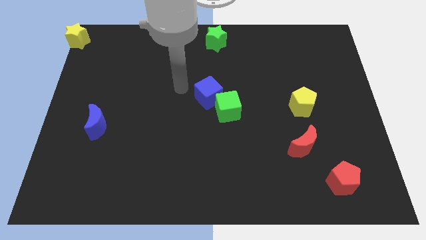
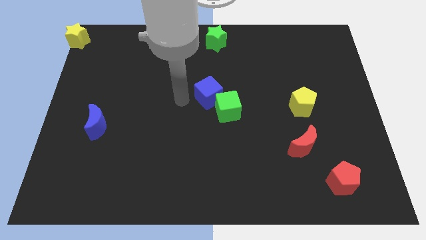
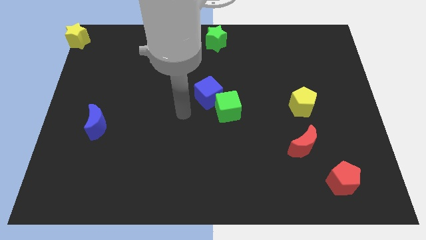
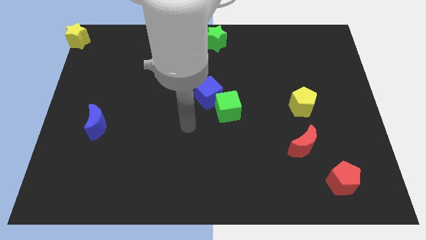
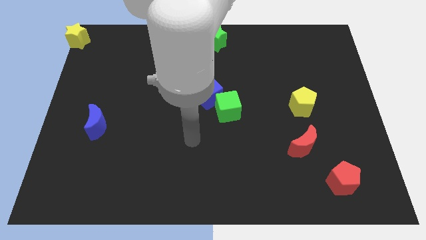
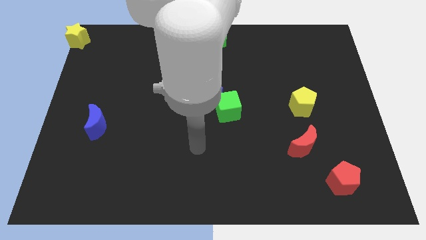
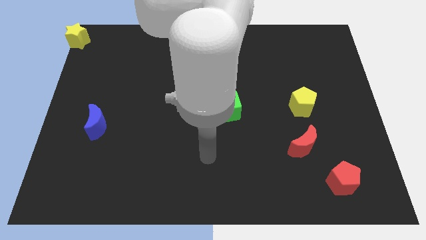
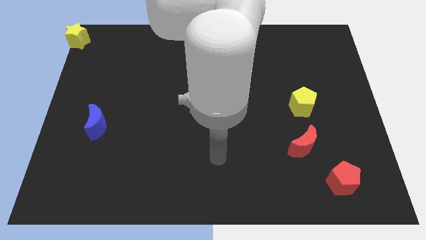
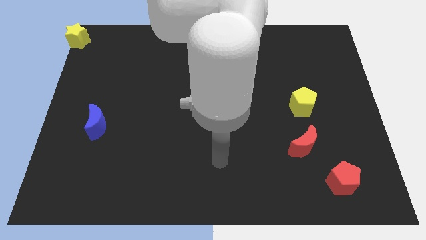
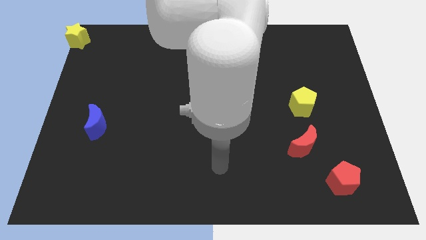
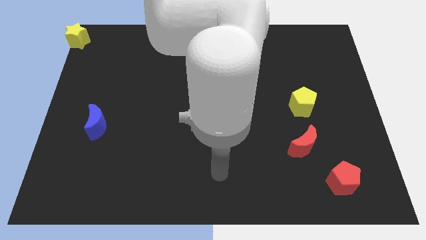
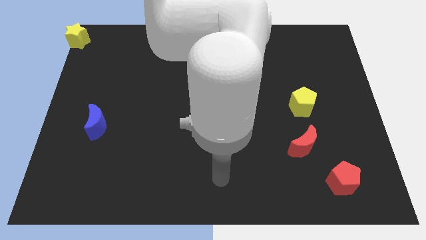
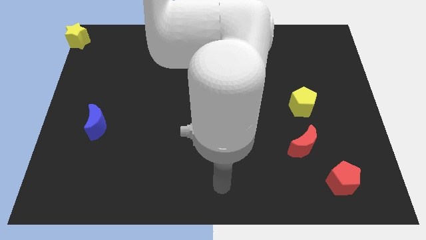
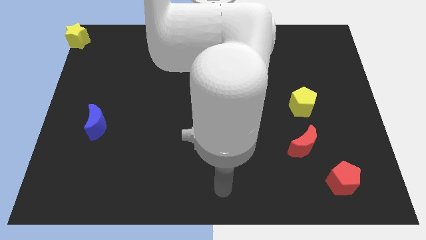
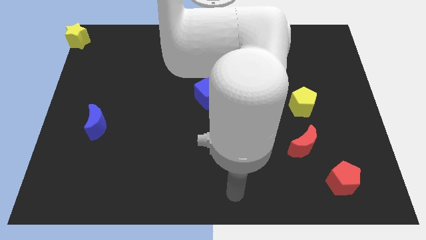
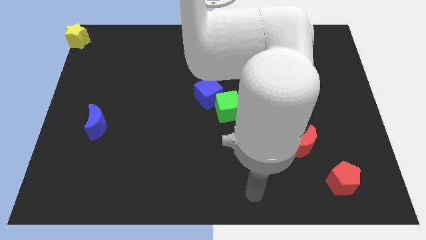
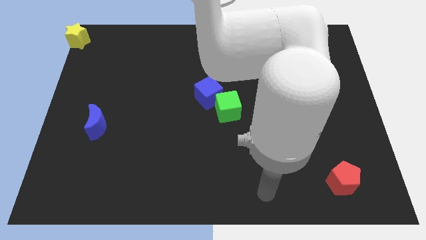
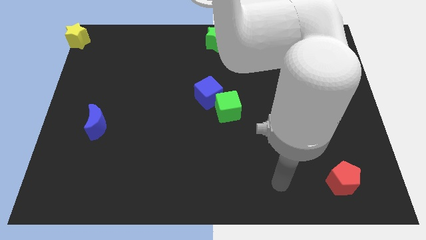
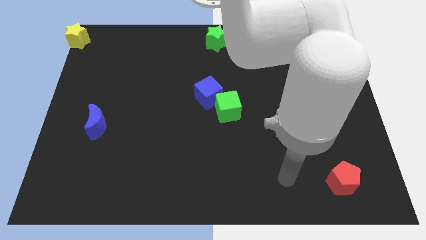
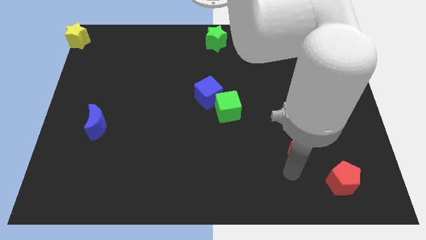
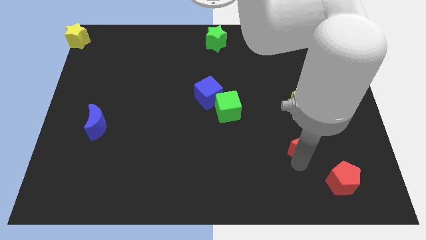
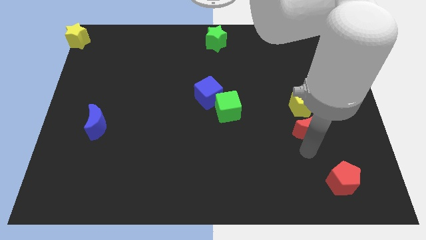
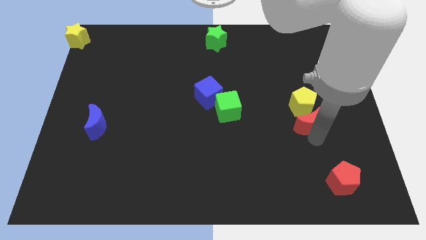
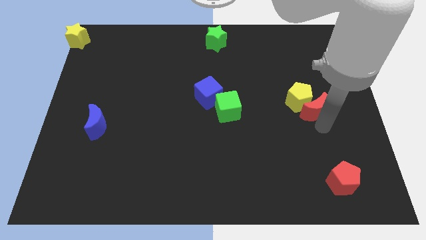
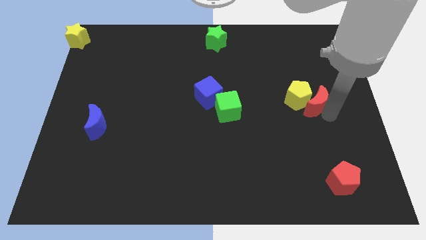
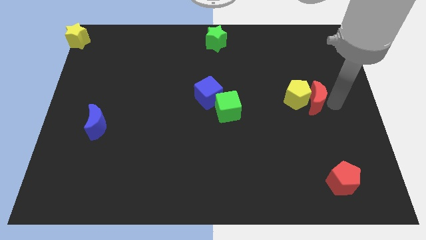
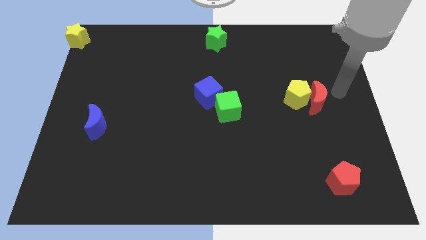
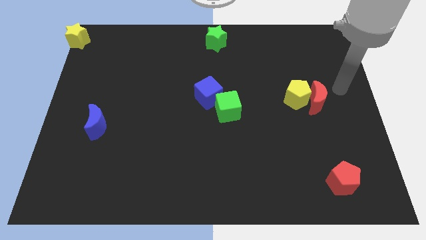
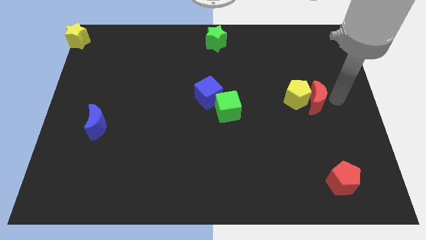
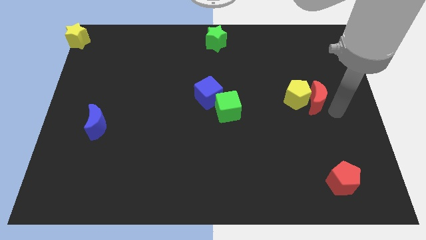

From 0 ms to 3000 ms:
push the red crescent to the right of the yellow pentagon

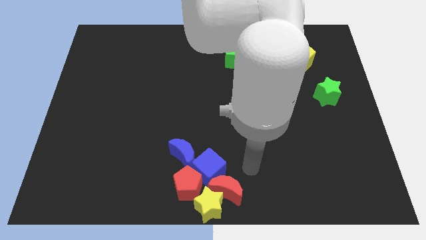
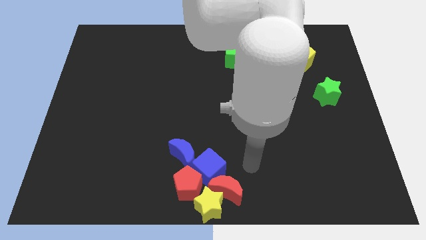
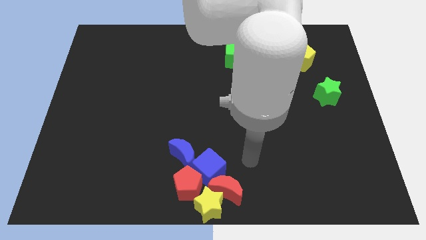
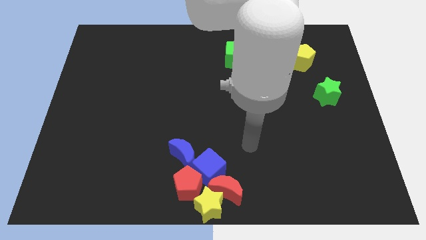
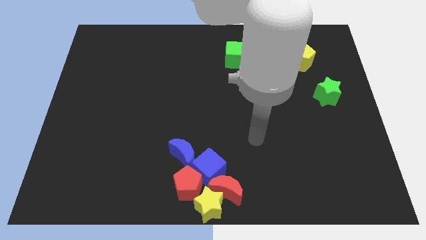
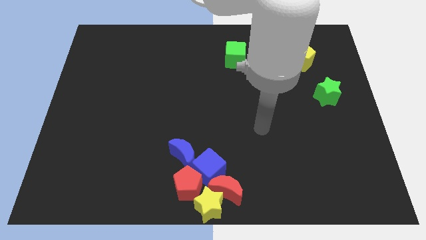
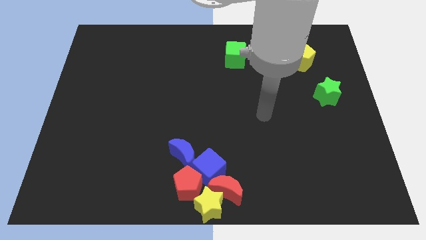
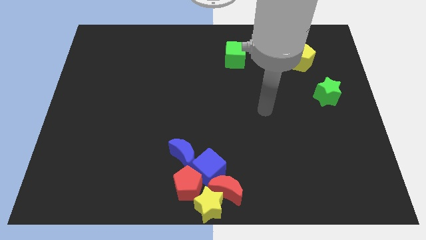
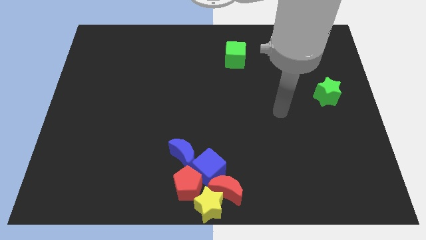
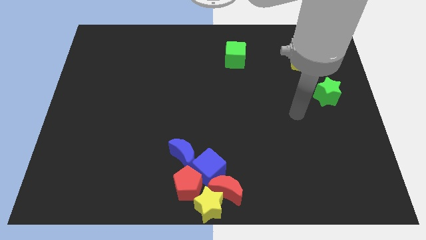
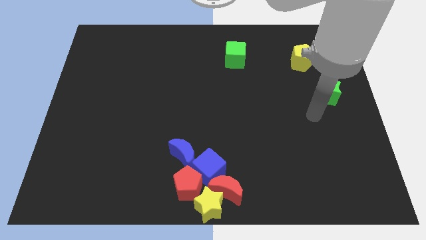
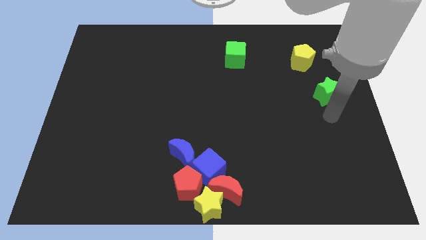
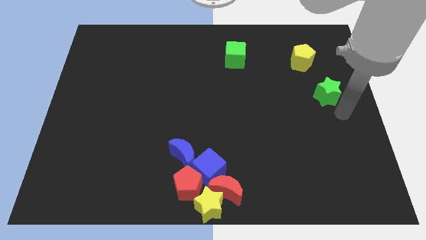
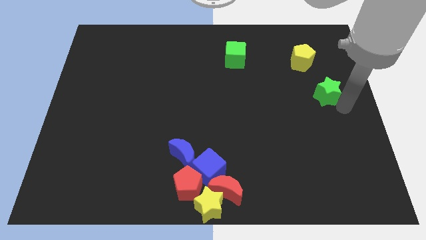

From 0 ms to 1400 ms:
move your arm to the bottom of the green star

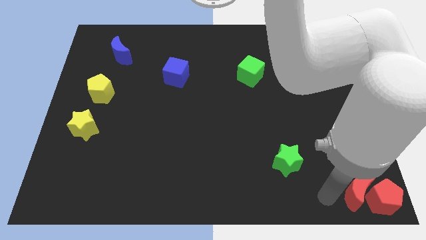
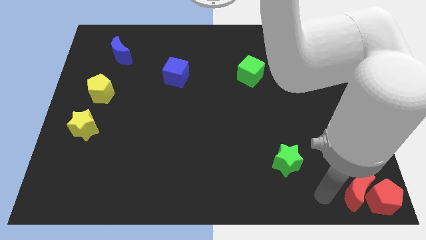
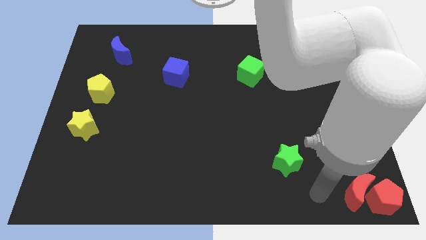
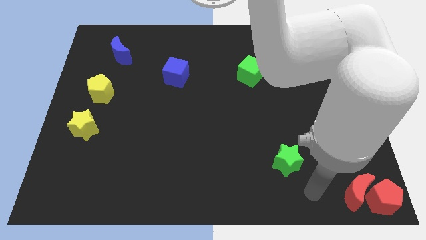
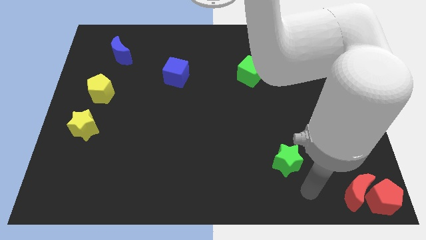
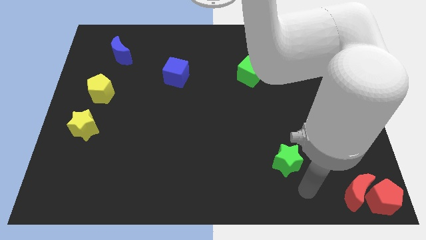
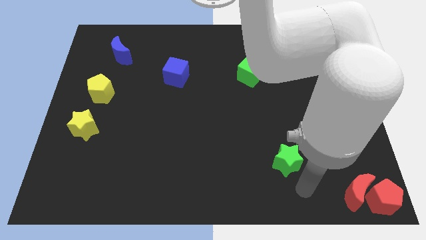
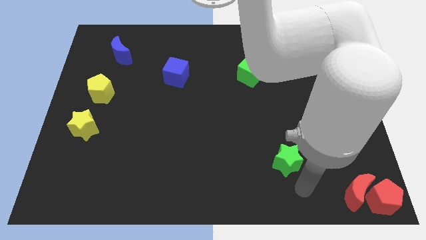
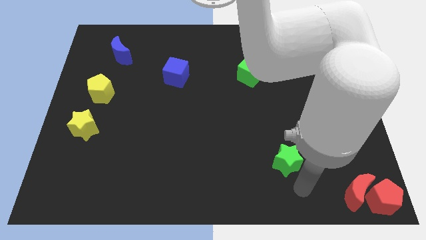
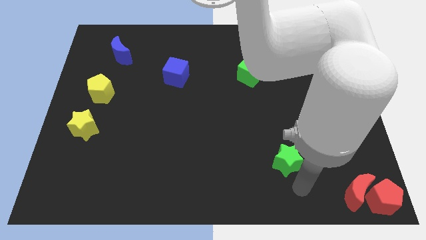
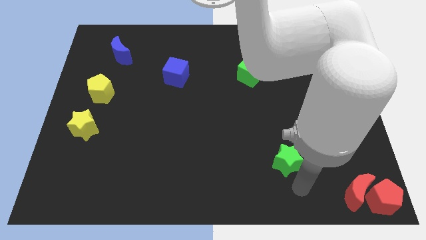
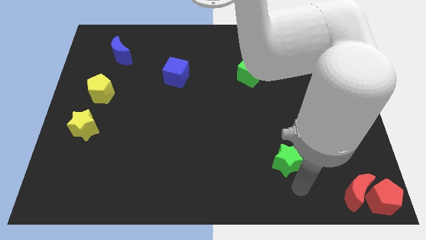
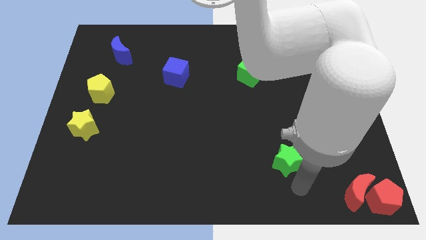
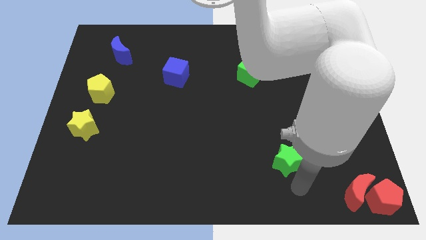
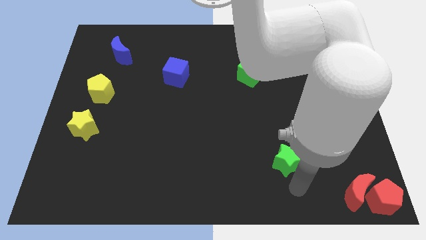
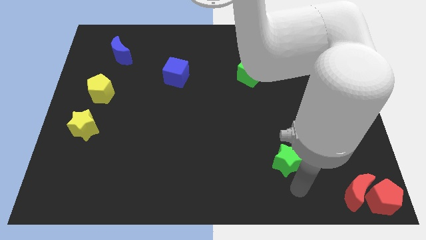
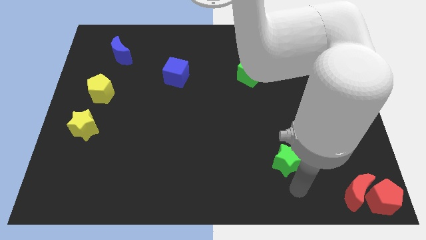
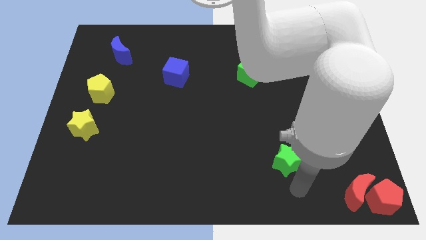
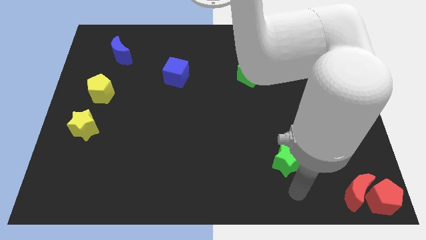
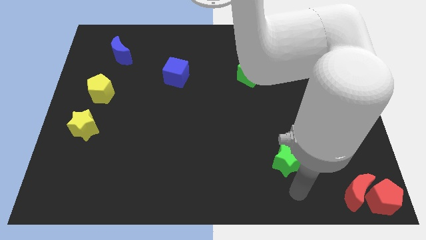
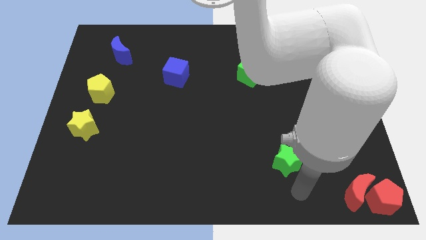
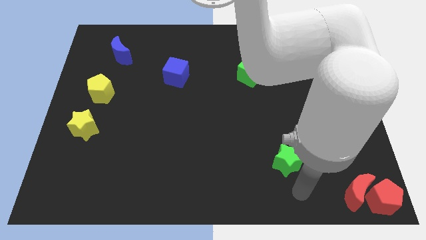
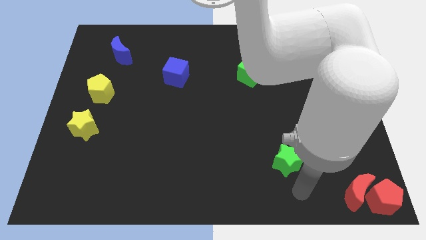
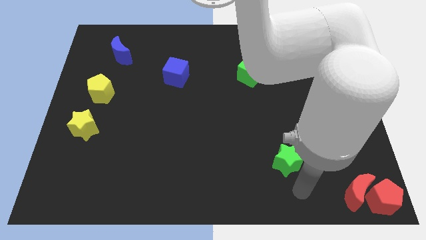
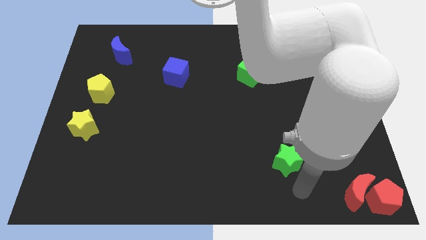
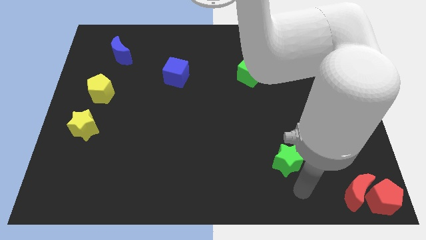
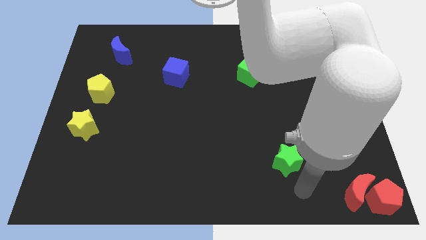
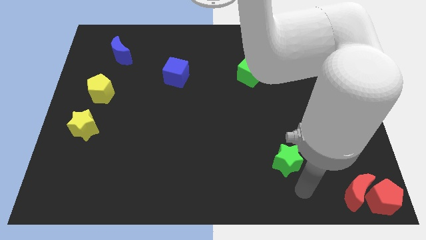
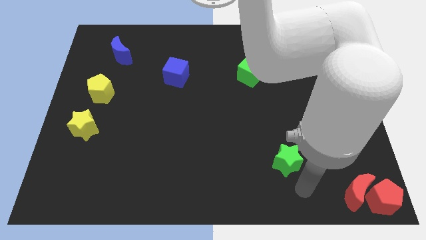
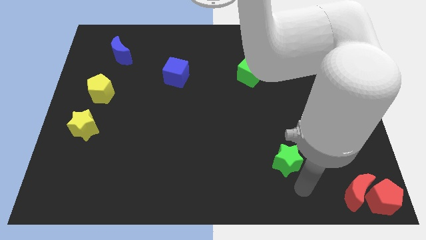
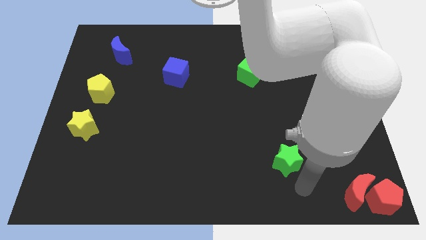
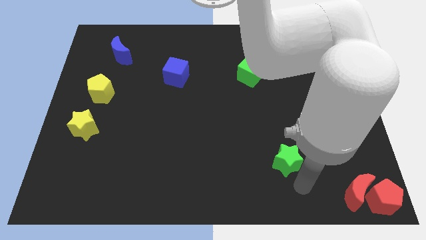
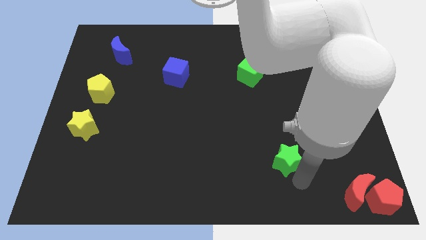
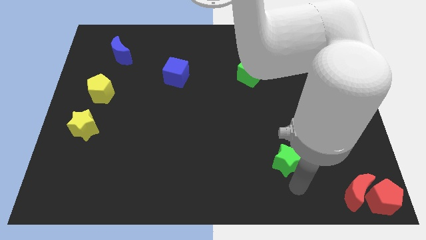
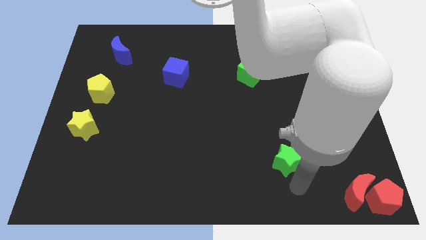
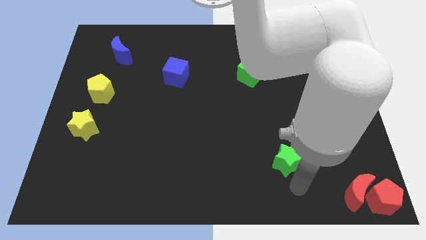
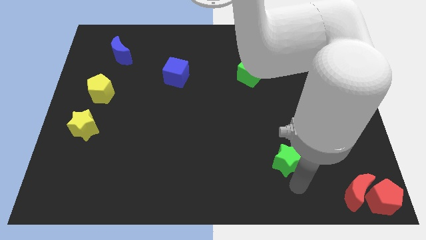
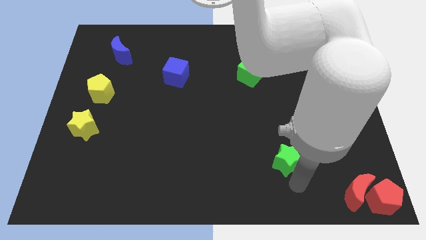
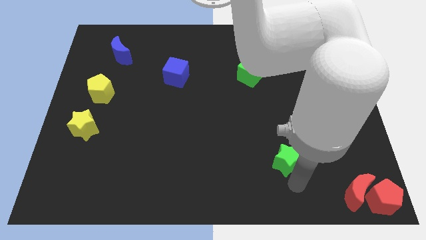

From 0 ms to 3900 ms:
move your arm below the green star

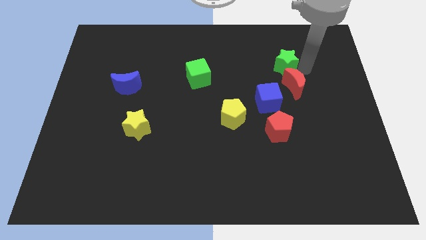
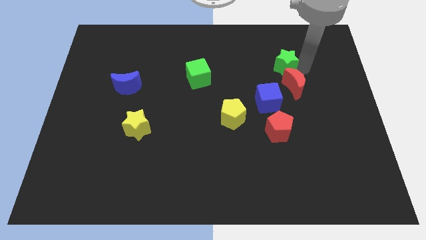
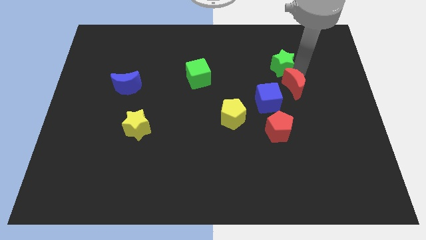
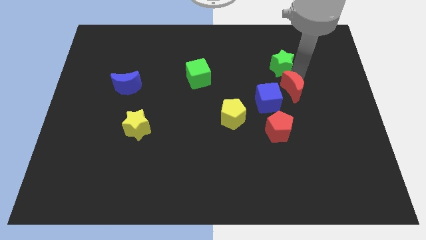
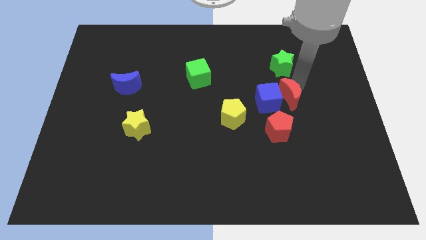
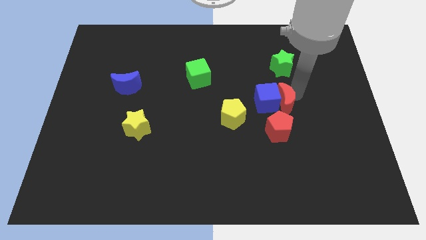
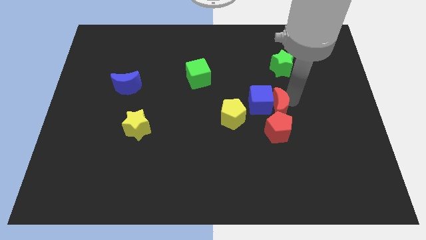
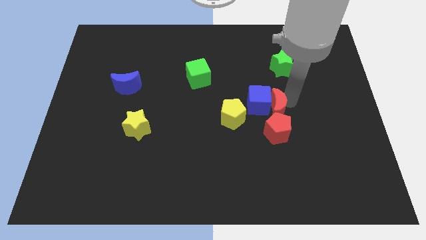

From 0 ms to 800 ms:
move the red crescent into the blue cube

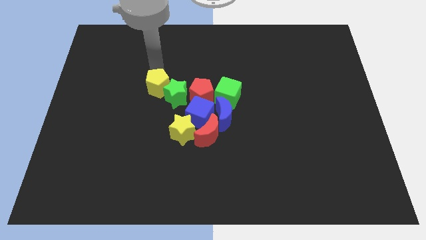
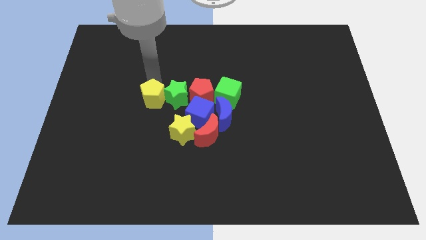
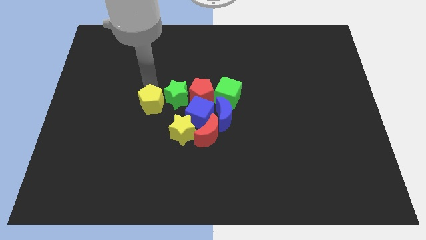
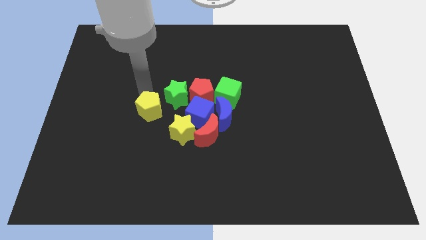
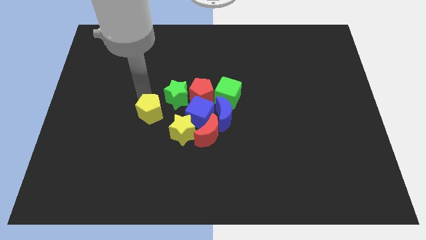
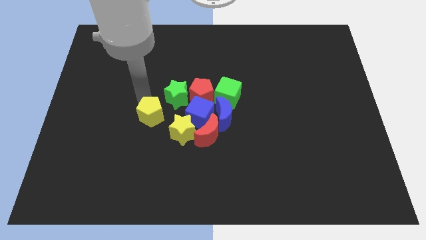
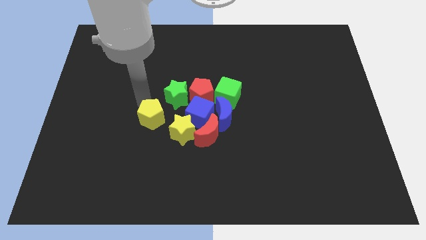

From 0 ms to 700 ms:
push the yellow pentagon to the left of the group of blocks
